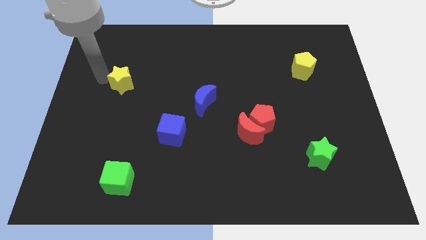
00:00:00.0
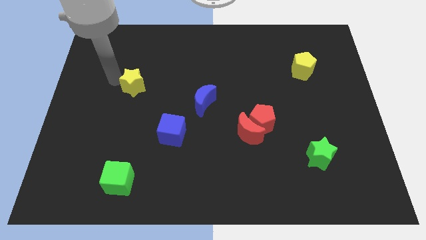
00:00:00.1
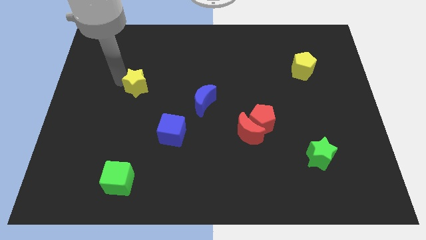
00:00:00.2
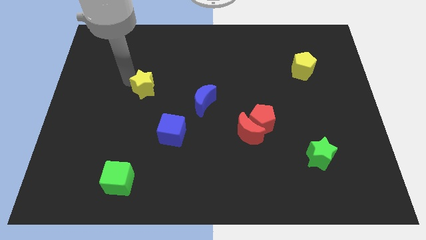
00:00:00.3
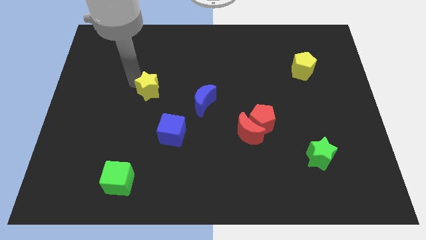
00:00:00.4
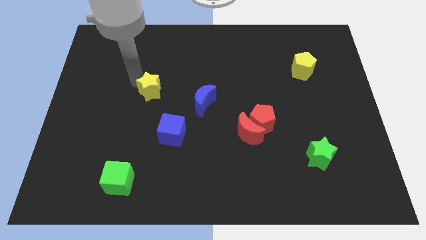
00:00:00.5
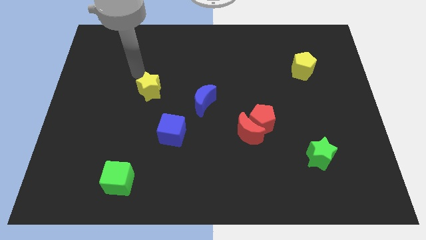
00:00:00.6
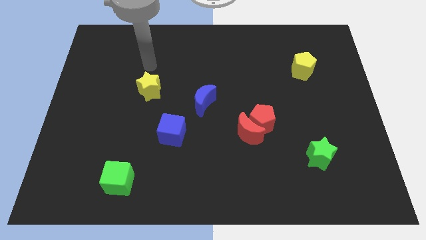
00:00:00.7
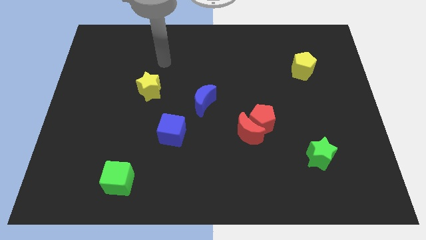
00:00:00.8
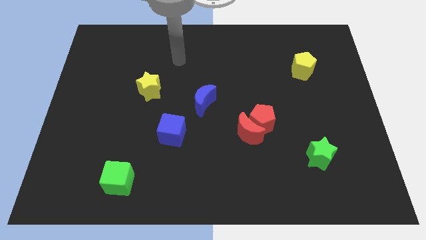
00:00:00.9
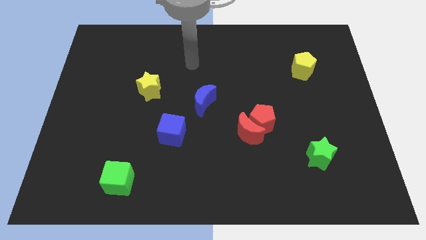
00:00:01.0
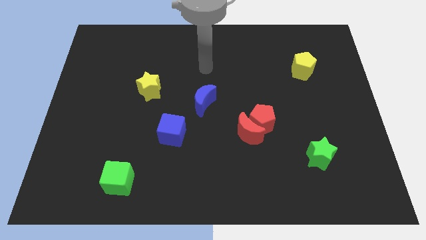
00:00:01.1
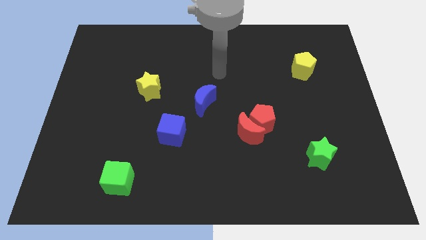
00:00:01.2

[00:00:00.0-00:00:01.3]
move yellow star towards the blue crescent

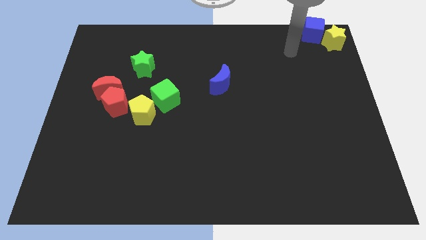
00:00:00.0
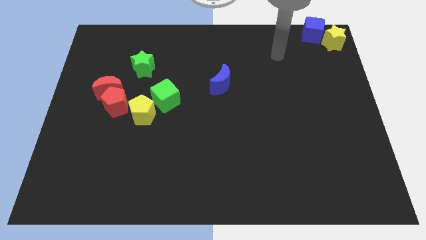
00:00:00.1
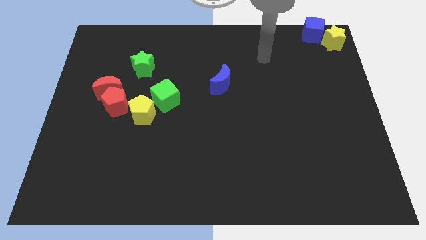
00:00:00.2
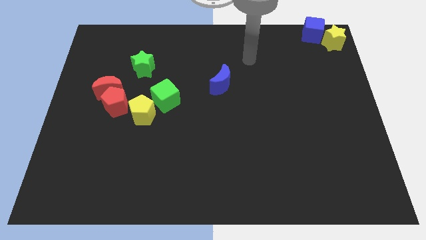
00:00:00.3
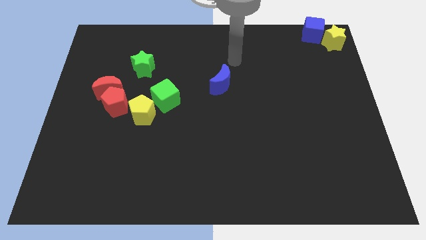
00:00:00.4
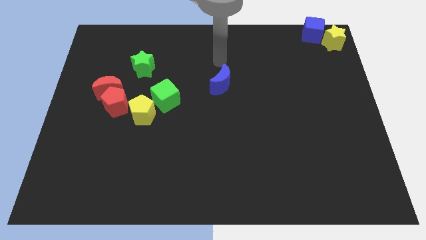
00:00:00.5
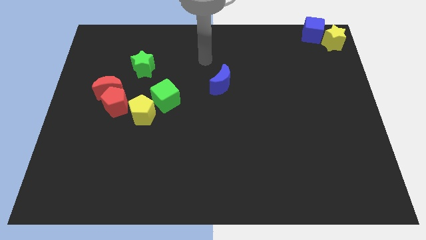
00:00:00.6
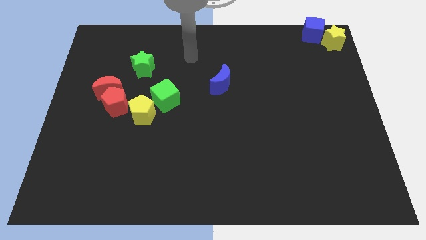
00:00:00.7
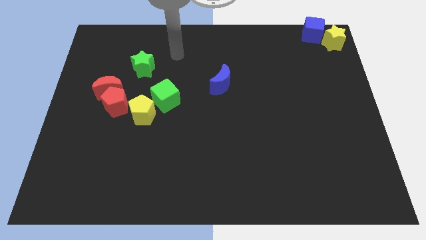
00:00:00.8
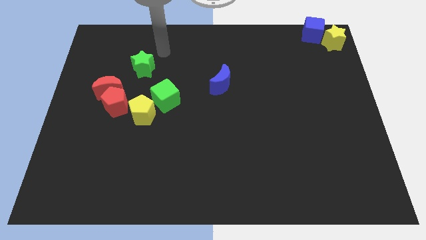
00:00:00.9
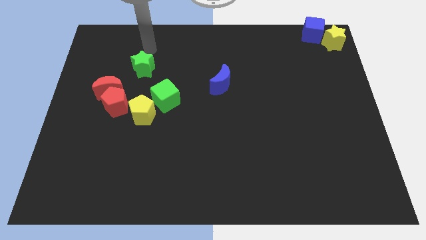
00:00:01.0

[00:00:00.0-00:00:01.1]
move your arm to the top side of the green star

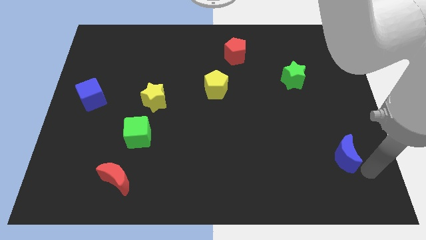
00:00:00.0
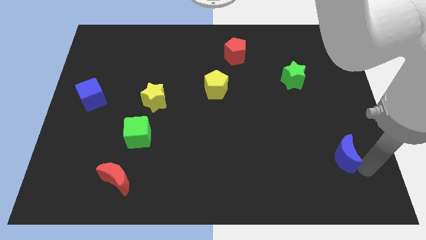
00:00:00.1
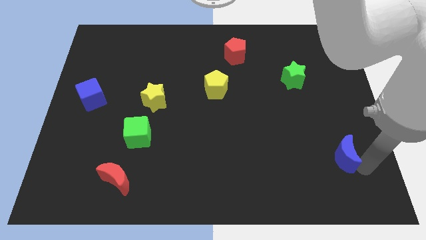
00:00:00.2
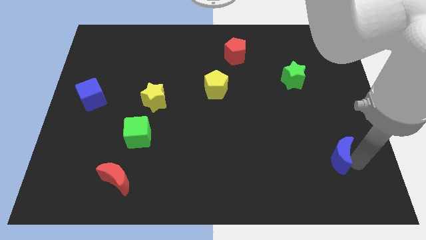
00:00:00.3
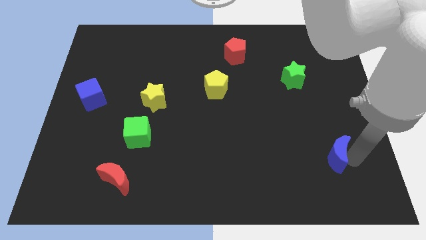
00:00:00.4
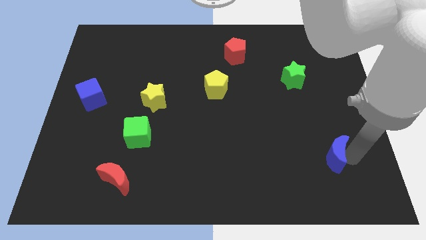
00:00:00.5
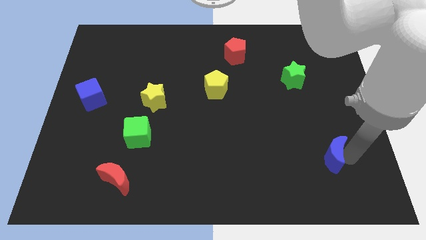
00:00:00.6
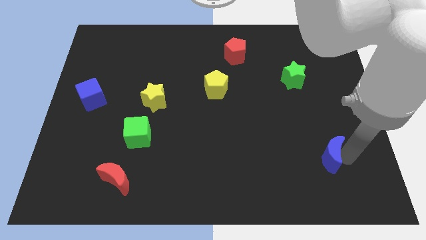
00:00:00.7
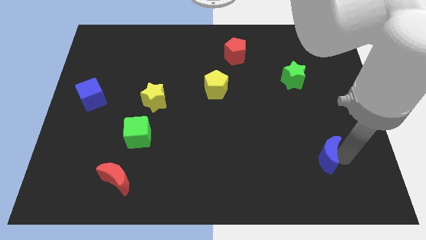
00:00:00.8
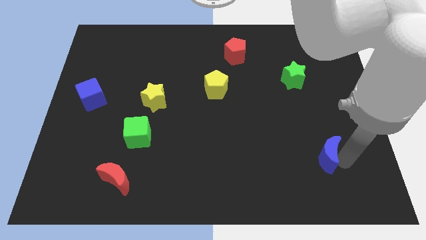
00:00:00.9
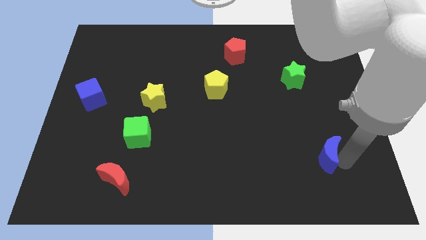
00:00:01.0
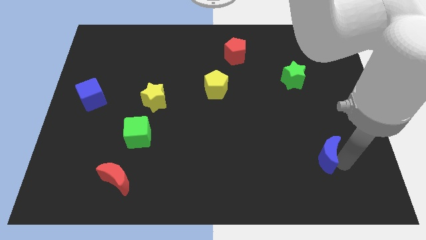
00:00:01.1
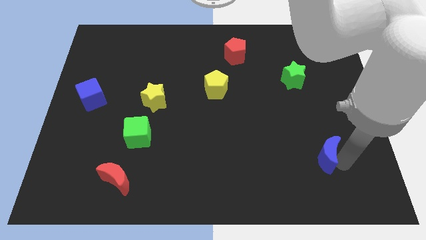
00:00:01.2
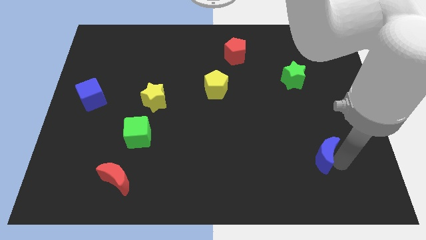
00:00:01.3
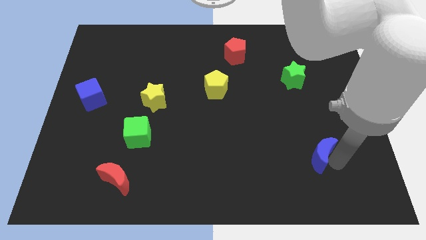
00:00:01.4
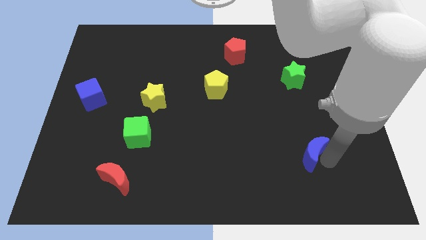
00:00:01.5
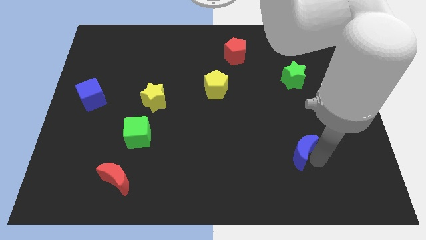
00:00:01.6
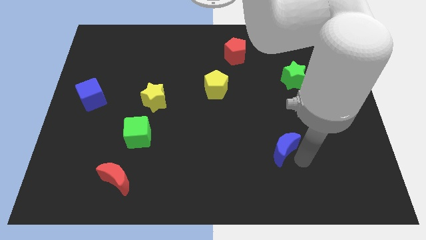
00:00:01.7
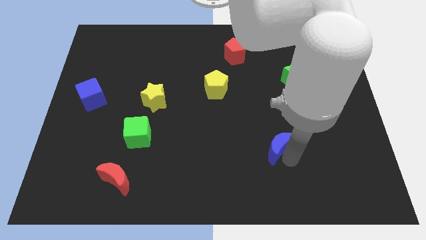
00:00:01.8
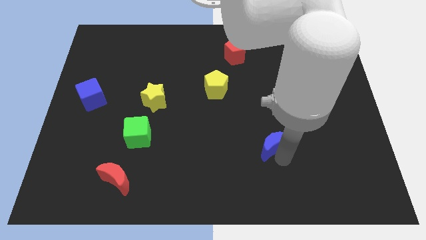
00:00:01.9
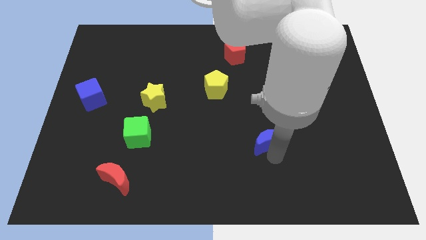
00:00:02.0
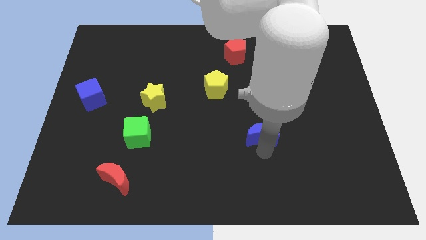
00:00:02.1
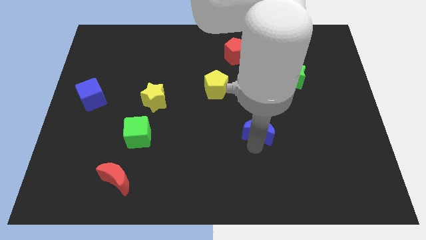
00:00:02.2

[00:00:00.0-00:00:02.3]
place the blue moon horizontally right to the green cube

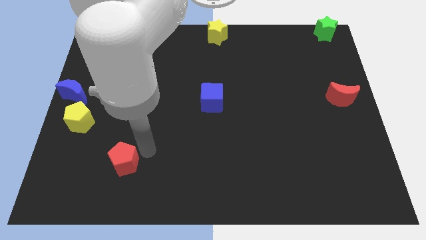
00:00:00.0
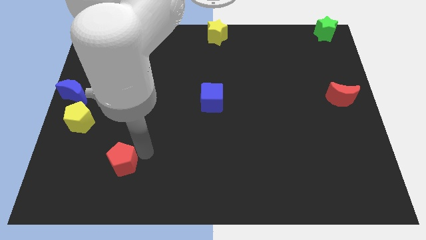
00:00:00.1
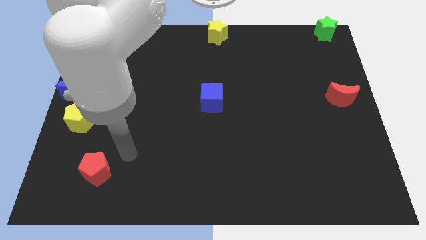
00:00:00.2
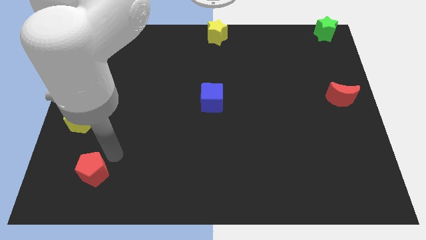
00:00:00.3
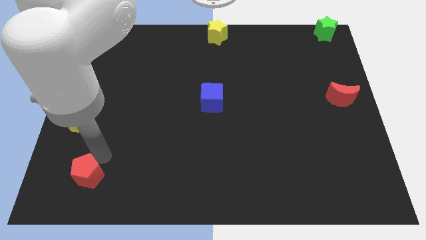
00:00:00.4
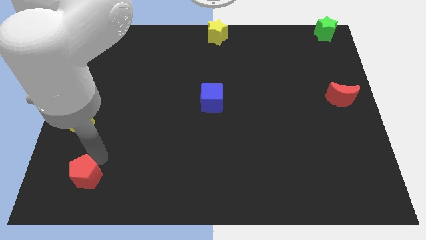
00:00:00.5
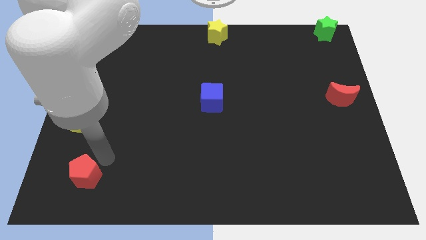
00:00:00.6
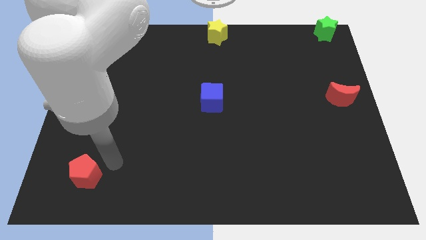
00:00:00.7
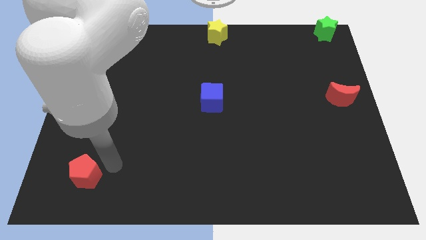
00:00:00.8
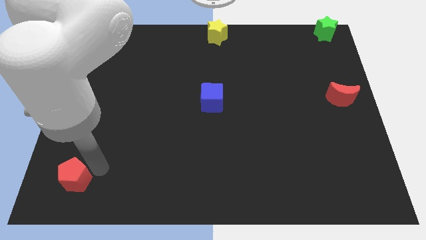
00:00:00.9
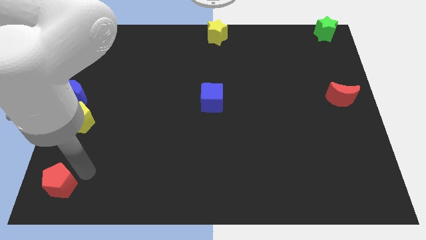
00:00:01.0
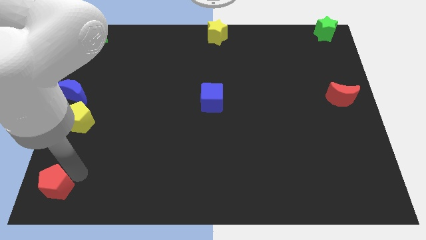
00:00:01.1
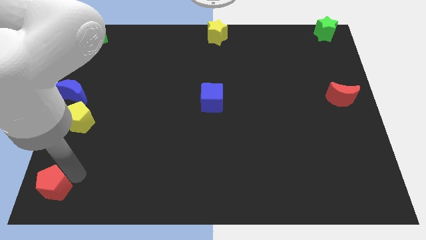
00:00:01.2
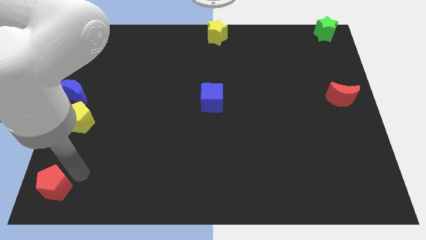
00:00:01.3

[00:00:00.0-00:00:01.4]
place the red pentagon vertically below the yellow pentagon

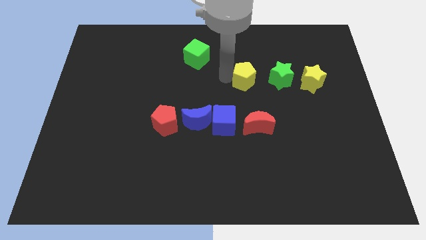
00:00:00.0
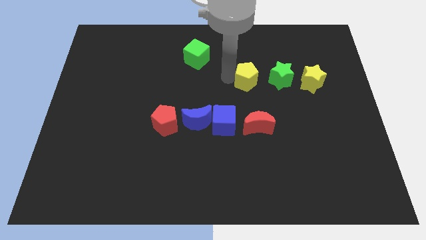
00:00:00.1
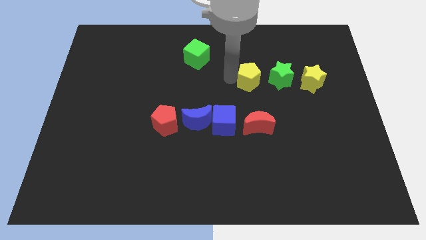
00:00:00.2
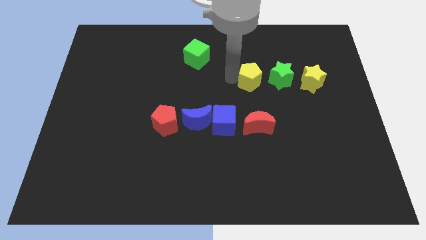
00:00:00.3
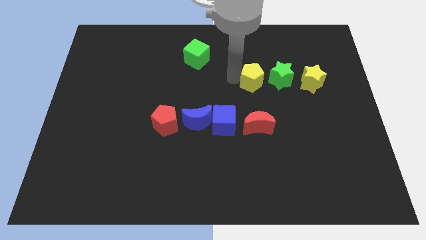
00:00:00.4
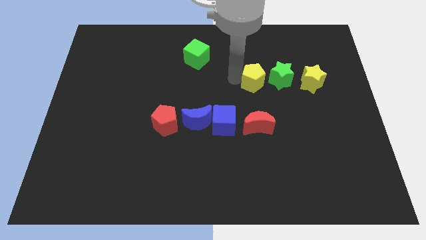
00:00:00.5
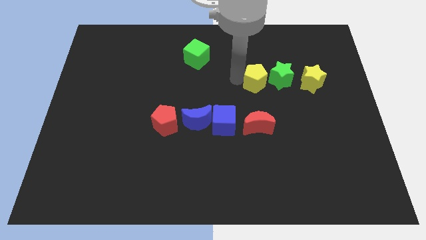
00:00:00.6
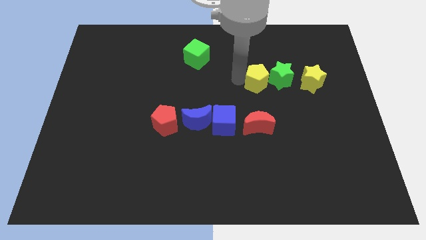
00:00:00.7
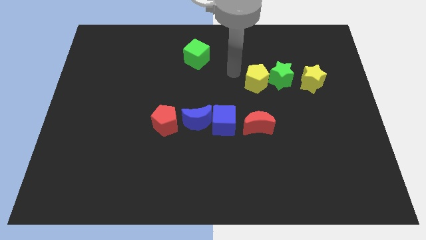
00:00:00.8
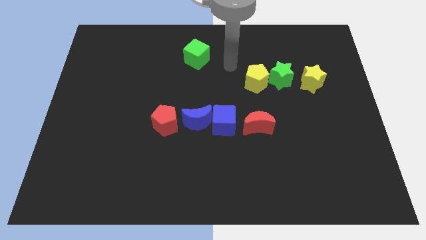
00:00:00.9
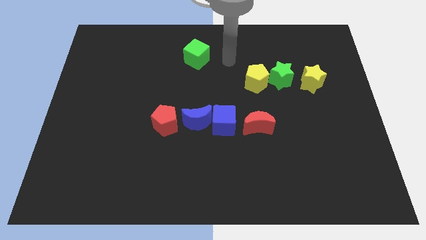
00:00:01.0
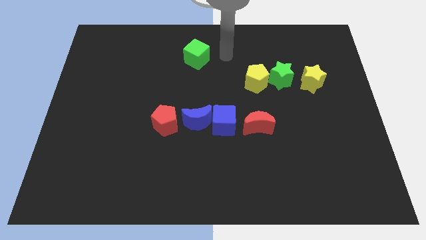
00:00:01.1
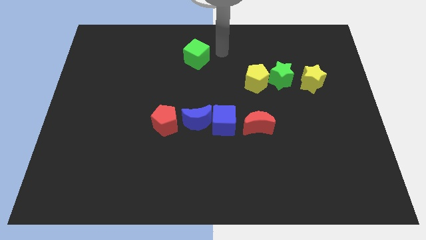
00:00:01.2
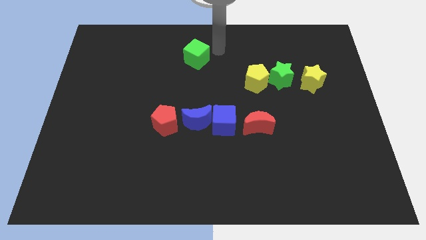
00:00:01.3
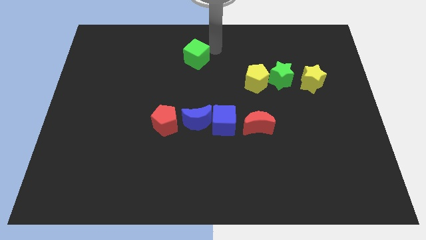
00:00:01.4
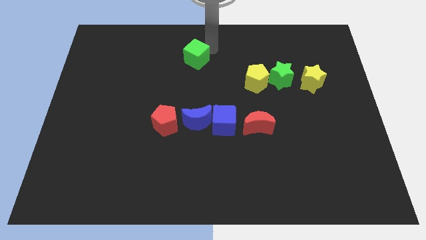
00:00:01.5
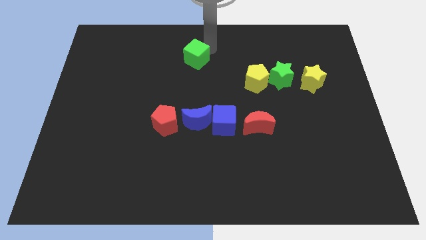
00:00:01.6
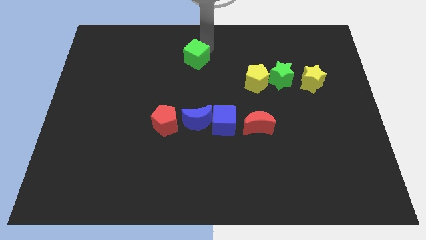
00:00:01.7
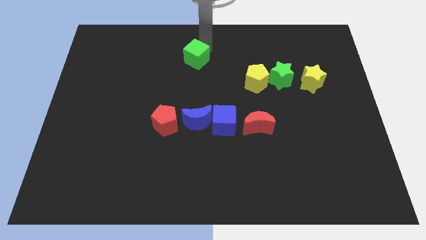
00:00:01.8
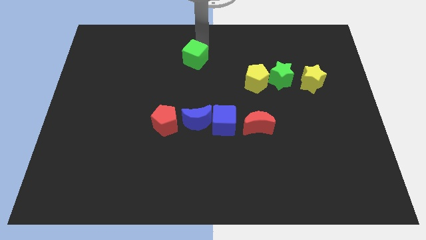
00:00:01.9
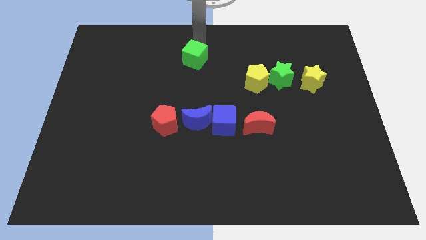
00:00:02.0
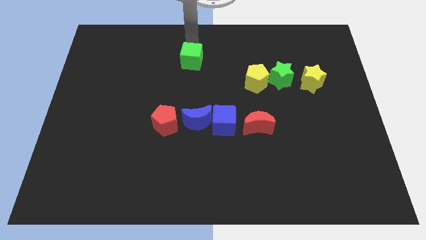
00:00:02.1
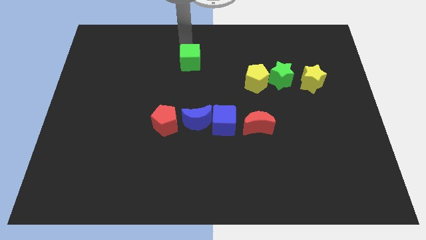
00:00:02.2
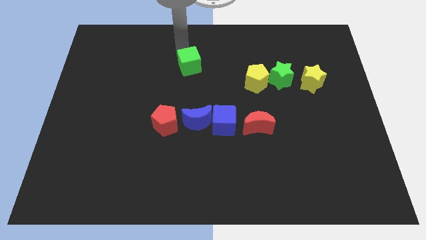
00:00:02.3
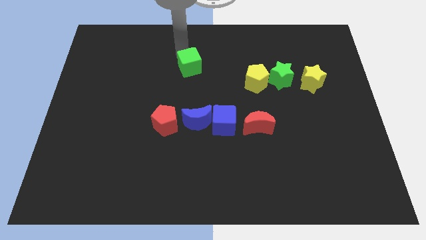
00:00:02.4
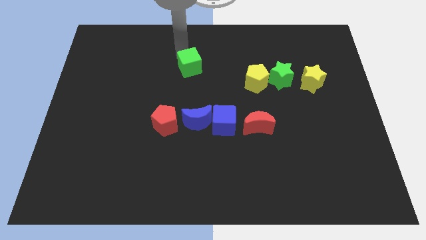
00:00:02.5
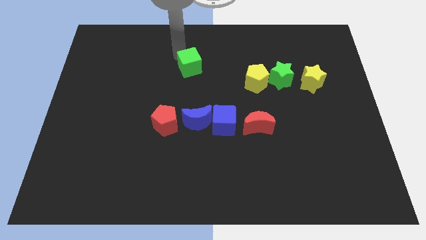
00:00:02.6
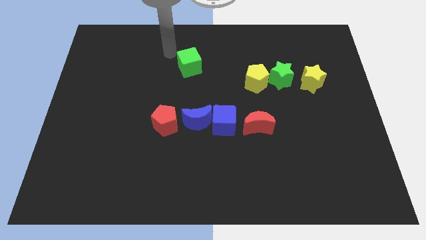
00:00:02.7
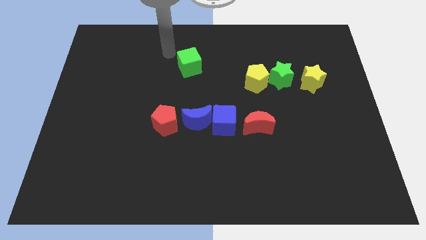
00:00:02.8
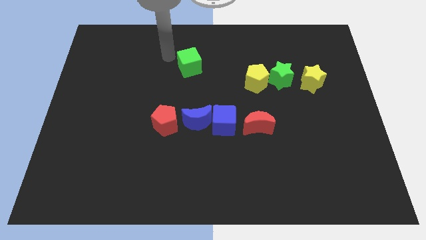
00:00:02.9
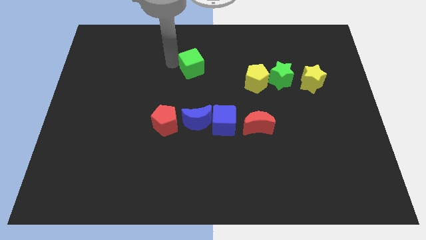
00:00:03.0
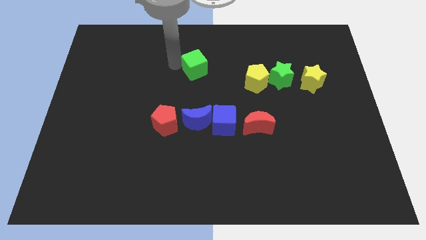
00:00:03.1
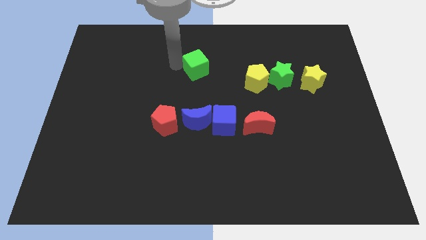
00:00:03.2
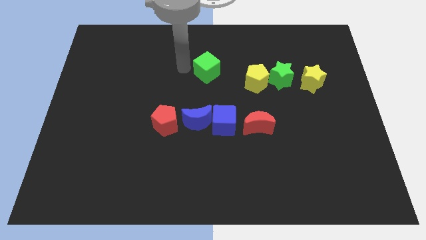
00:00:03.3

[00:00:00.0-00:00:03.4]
push yellow pentagon close to green star
